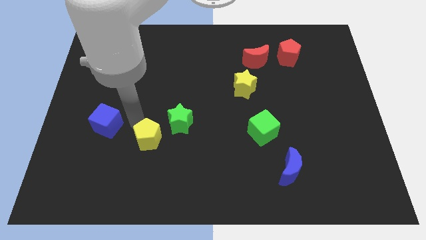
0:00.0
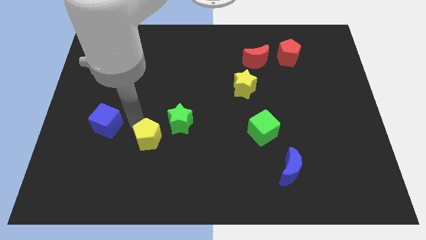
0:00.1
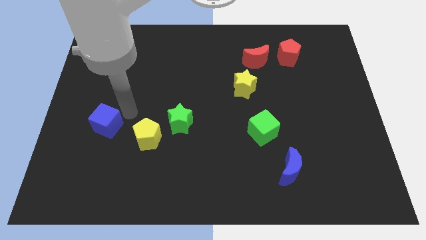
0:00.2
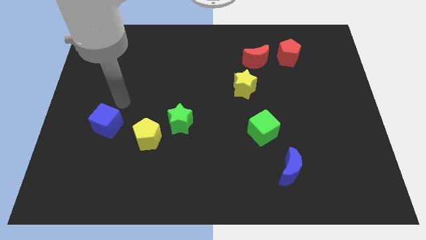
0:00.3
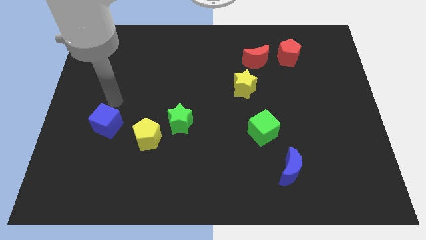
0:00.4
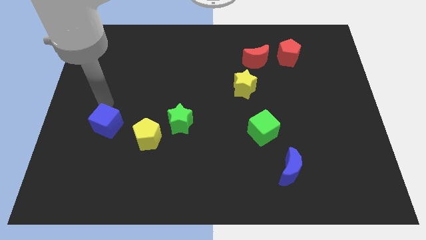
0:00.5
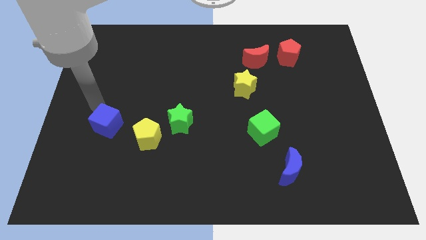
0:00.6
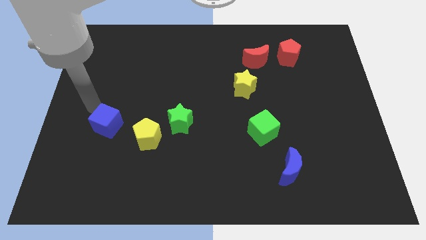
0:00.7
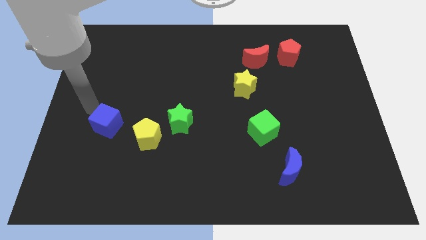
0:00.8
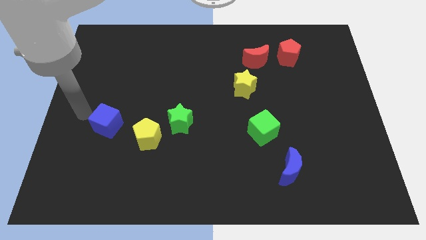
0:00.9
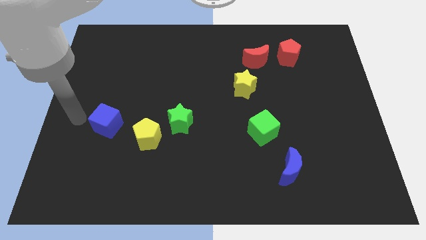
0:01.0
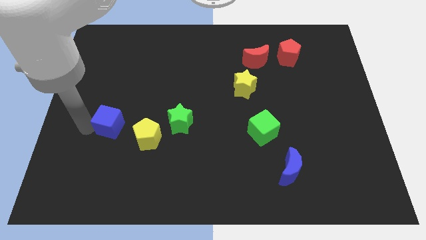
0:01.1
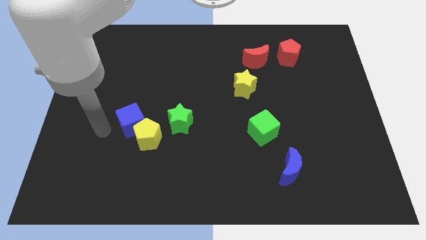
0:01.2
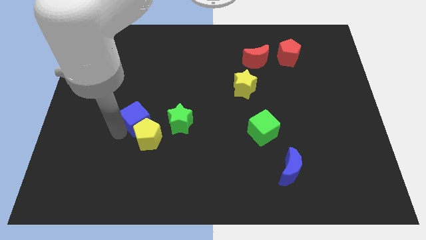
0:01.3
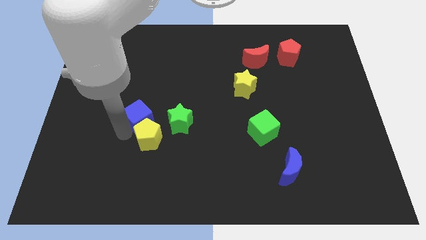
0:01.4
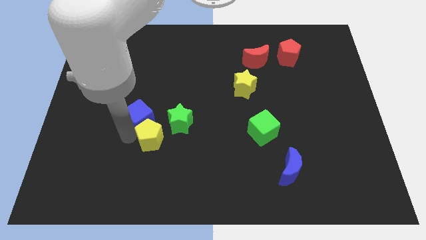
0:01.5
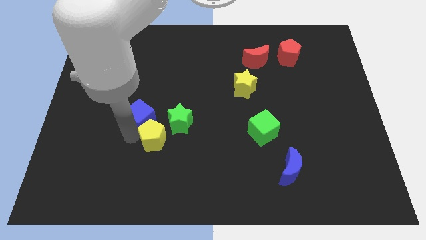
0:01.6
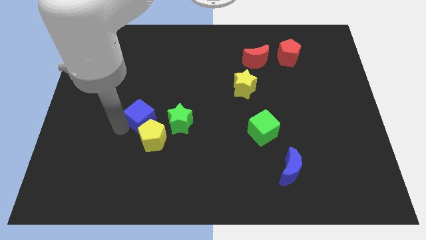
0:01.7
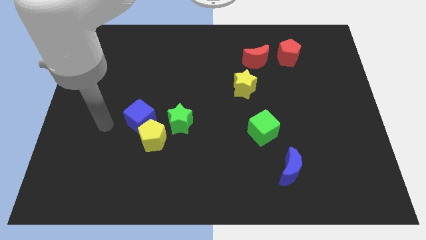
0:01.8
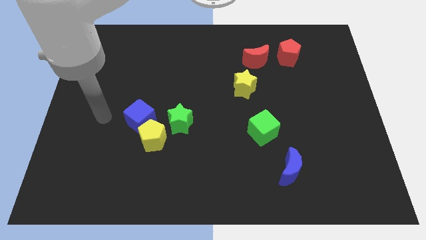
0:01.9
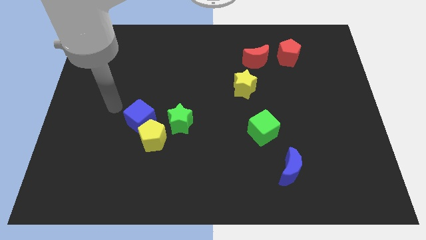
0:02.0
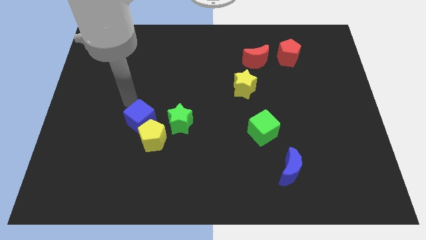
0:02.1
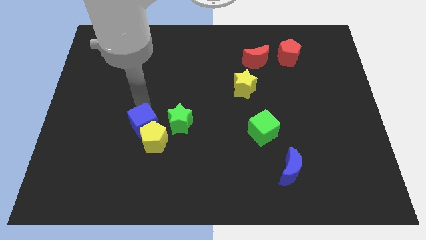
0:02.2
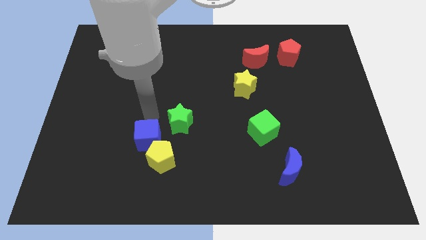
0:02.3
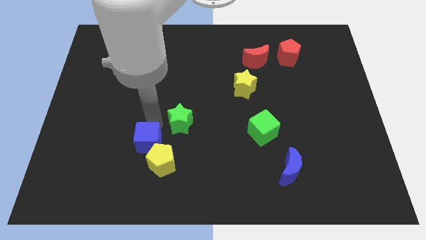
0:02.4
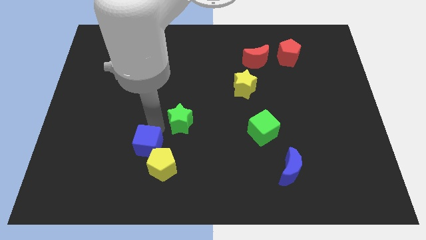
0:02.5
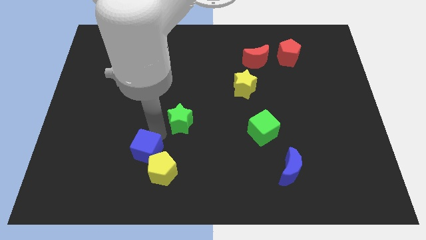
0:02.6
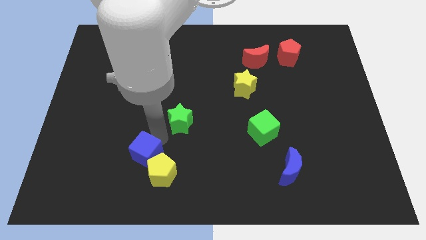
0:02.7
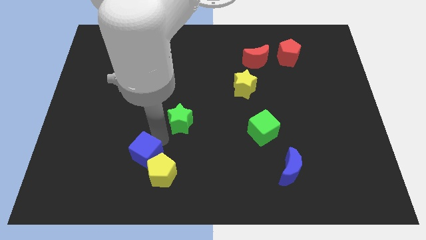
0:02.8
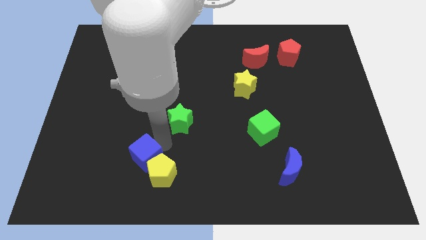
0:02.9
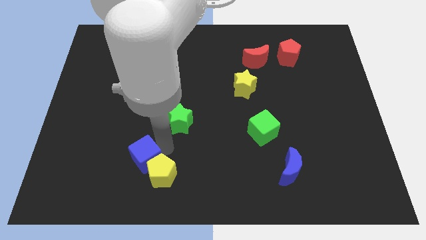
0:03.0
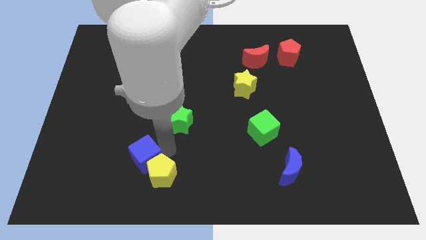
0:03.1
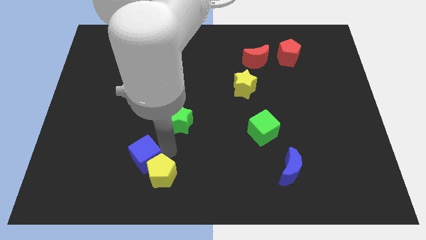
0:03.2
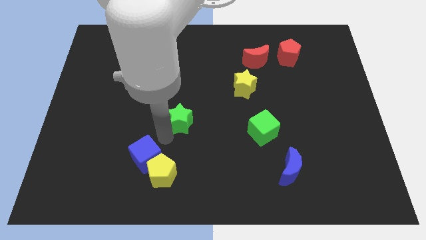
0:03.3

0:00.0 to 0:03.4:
push the blue cube into the yellow pentagon

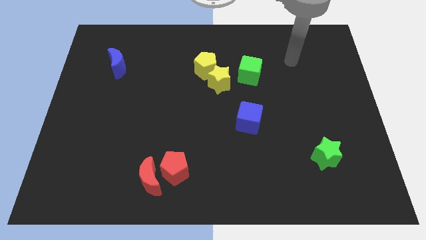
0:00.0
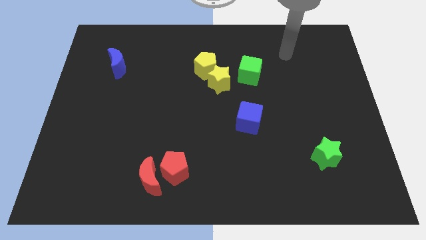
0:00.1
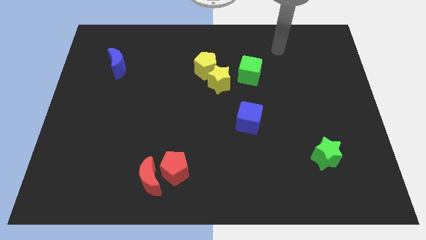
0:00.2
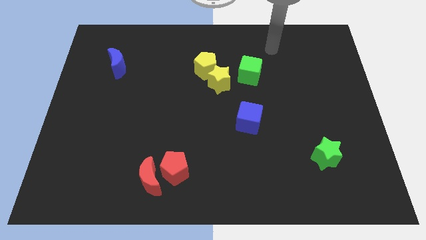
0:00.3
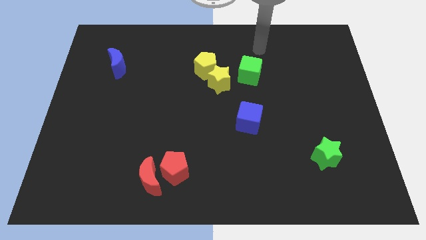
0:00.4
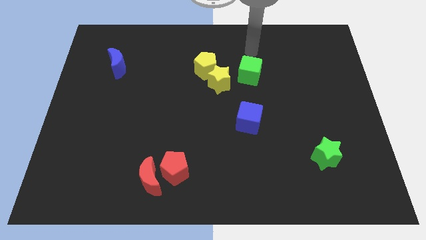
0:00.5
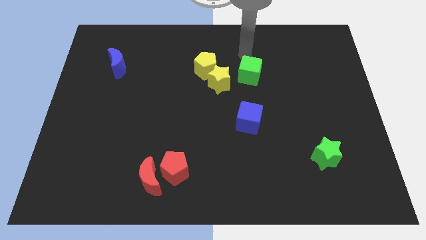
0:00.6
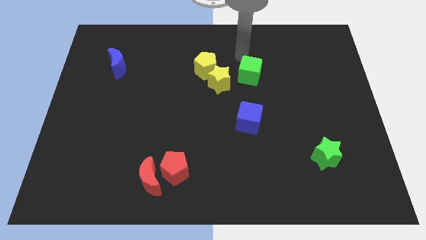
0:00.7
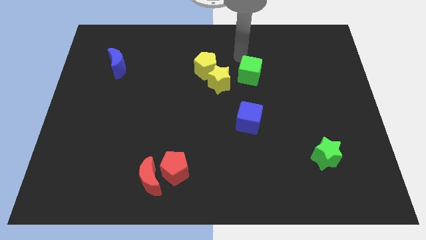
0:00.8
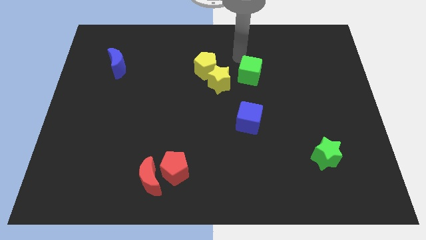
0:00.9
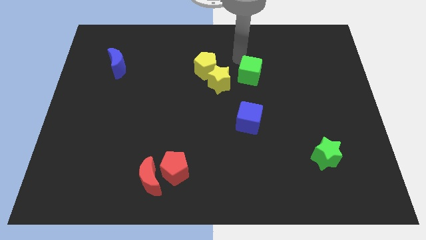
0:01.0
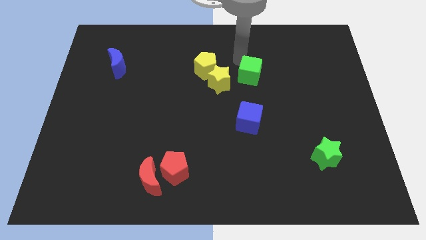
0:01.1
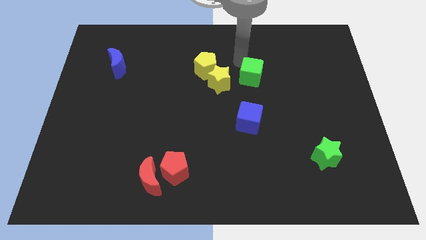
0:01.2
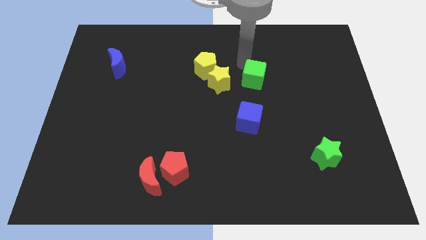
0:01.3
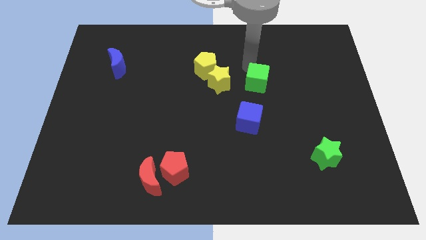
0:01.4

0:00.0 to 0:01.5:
place the green cube to the right side of the yellow star

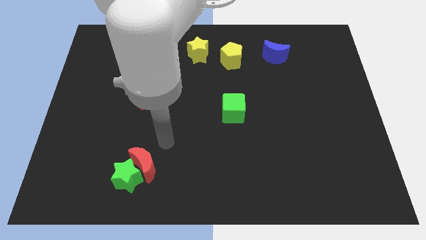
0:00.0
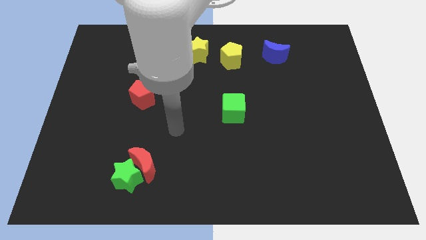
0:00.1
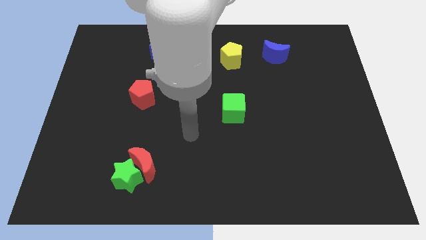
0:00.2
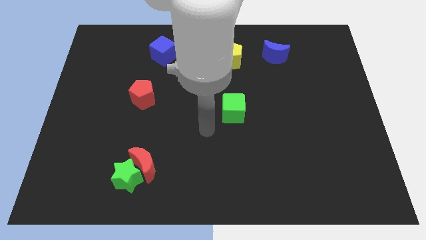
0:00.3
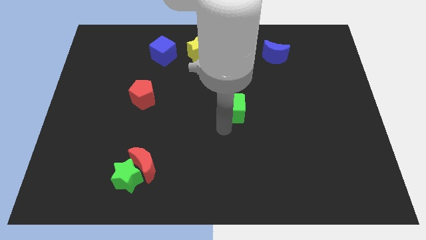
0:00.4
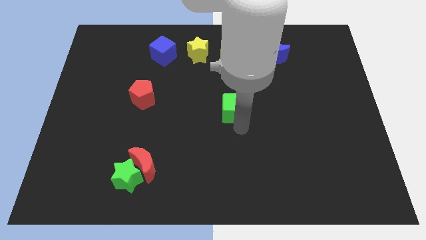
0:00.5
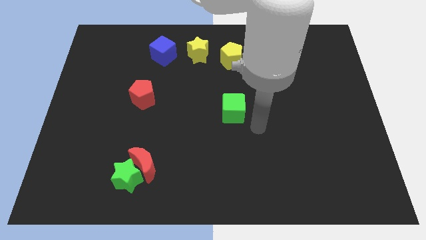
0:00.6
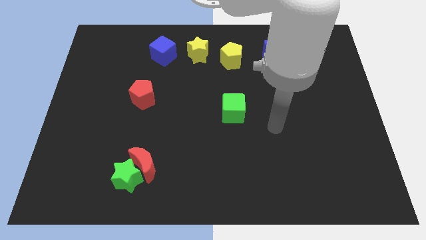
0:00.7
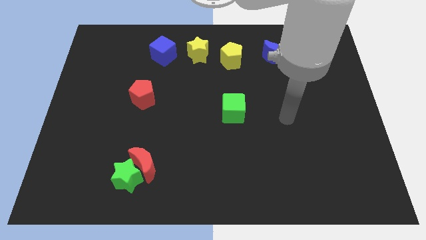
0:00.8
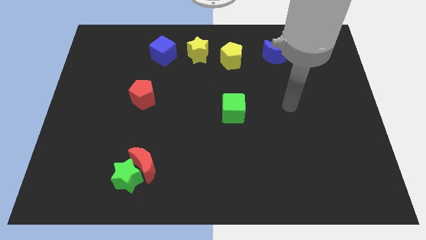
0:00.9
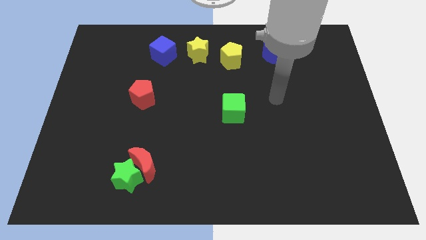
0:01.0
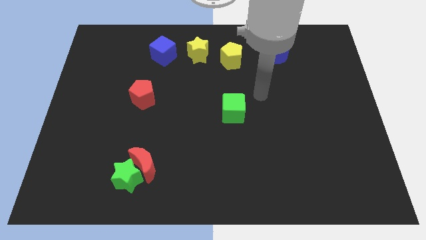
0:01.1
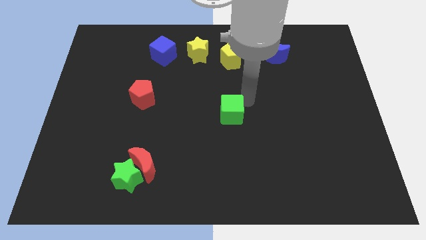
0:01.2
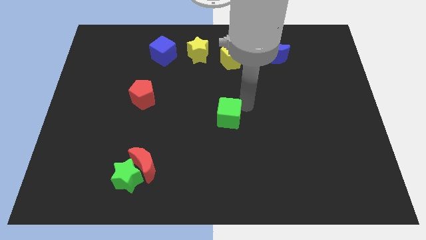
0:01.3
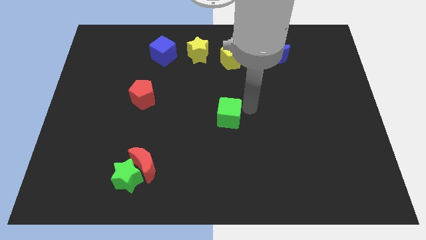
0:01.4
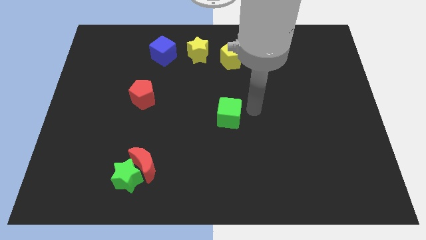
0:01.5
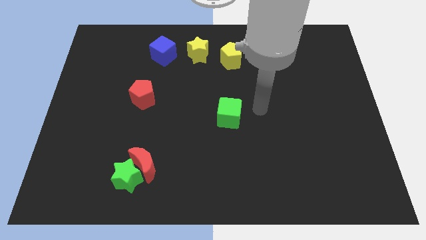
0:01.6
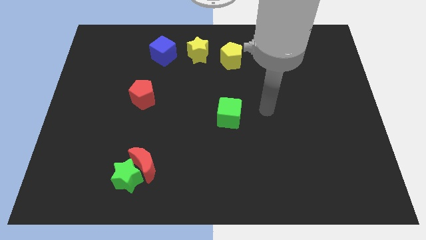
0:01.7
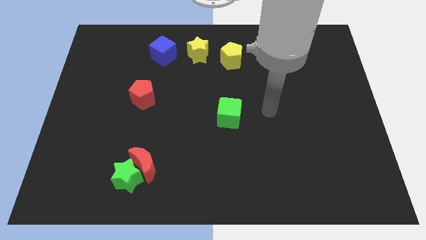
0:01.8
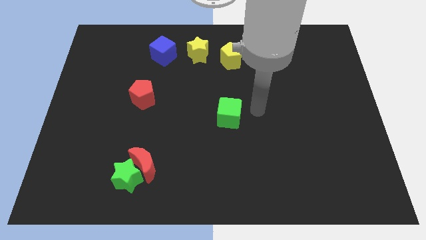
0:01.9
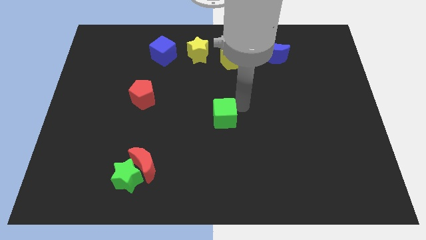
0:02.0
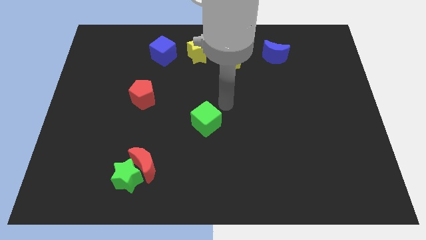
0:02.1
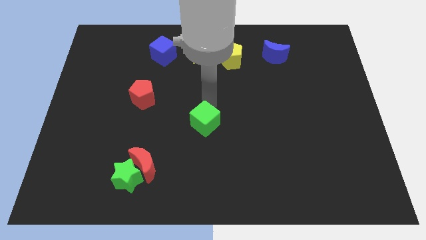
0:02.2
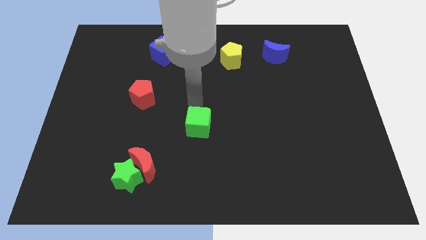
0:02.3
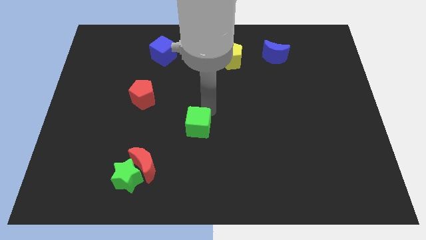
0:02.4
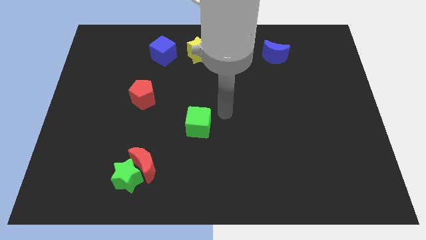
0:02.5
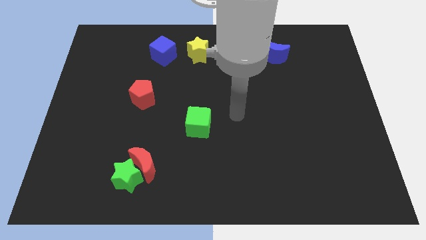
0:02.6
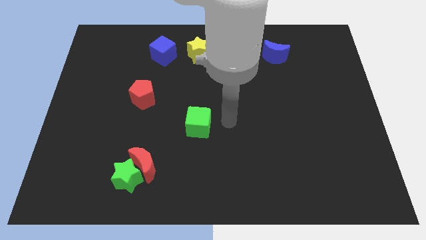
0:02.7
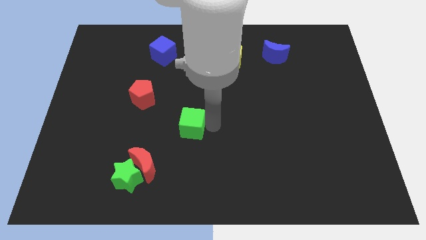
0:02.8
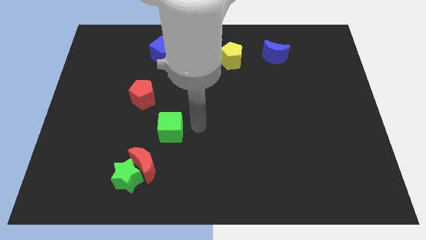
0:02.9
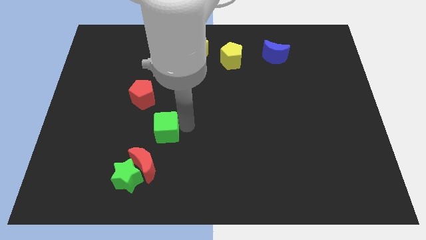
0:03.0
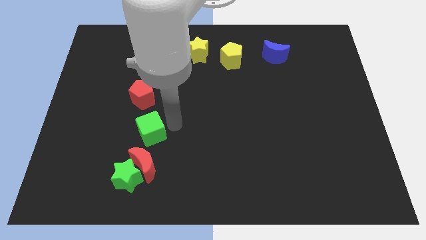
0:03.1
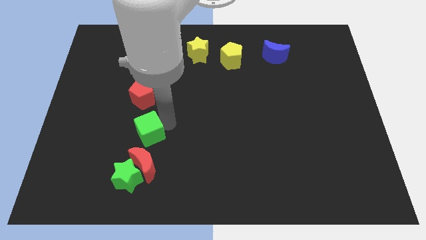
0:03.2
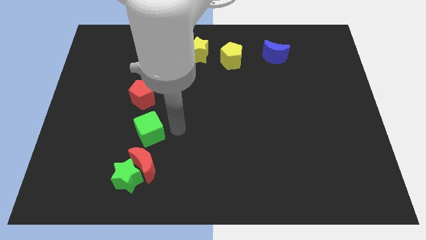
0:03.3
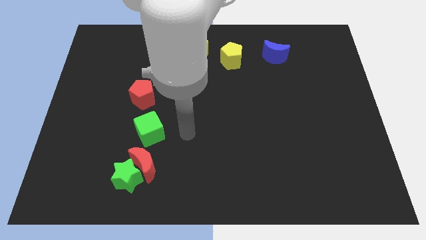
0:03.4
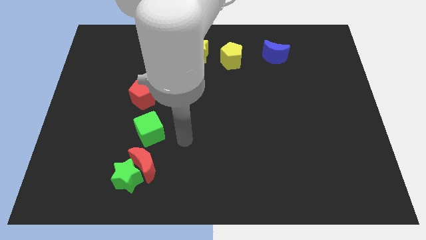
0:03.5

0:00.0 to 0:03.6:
move the green cube to top of the red crescent

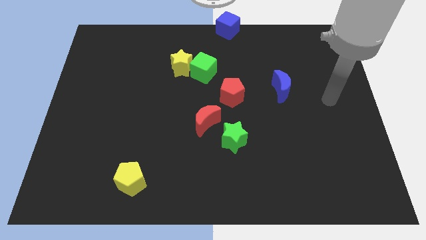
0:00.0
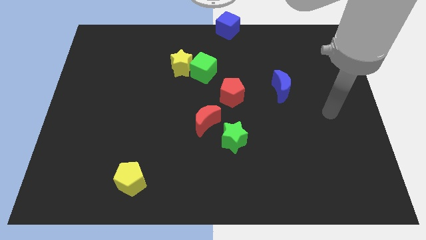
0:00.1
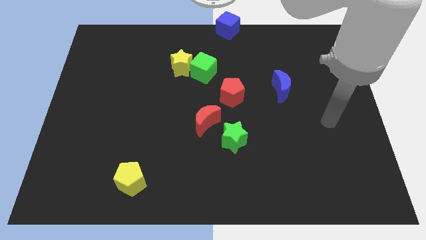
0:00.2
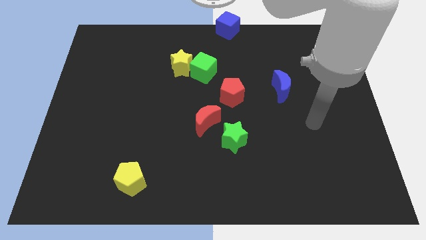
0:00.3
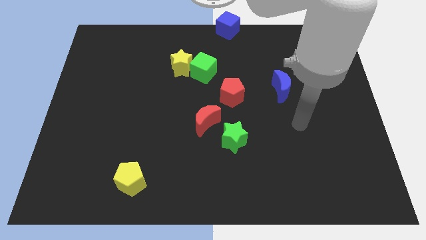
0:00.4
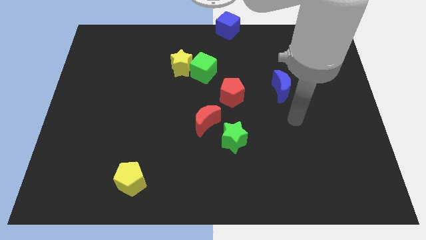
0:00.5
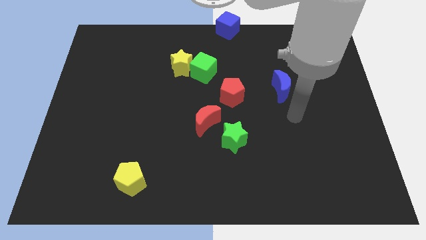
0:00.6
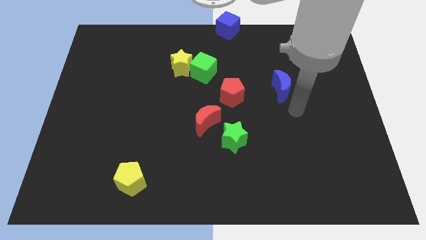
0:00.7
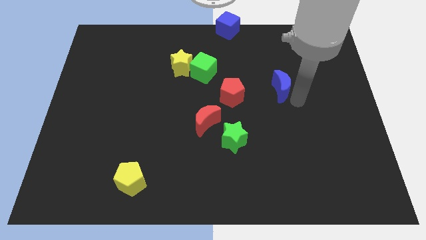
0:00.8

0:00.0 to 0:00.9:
go near the blue moon
